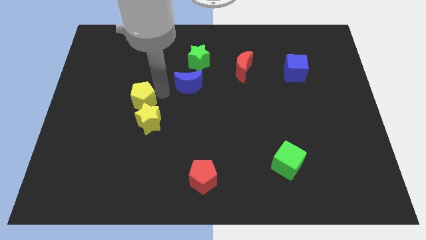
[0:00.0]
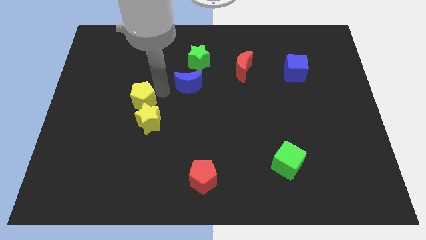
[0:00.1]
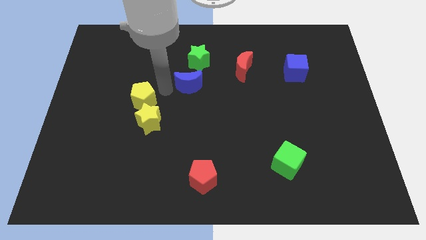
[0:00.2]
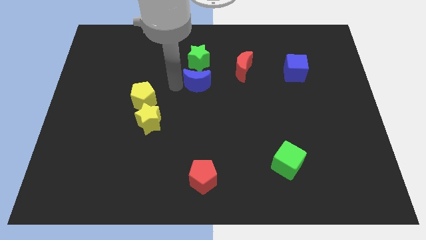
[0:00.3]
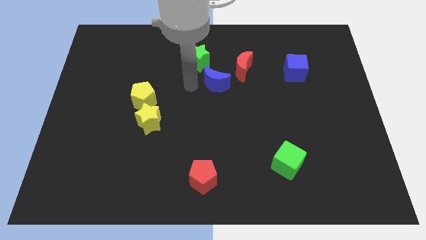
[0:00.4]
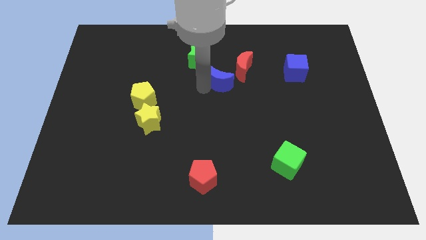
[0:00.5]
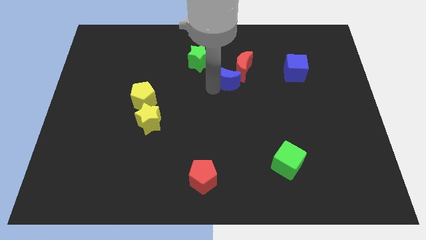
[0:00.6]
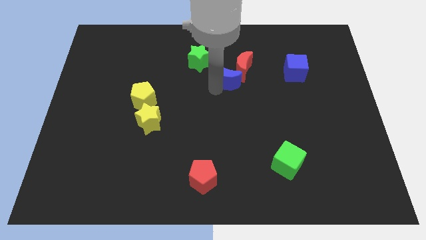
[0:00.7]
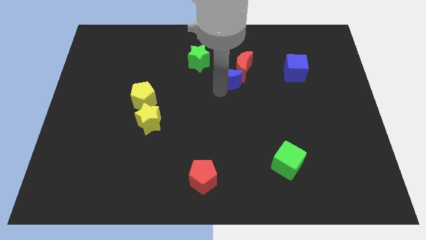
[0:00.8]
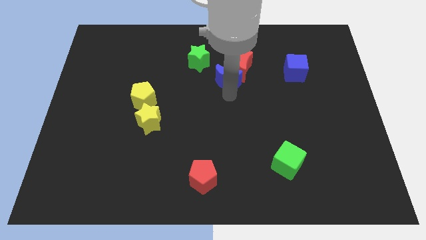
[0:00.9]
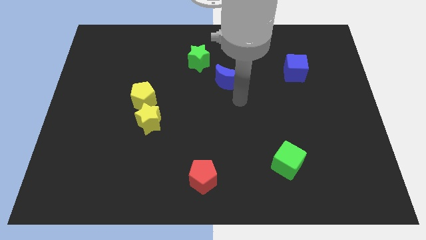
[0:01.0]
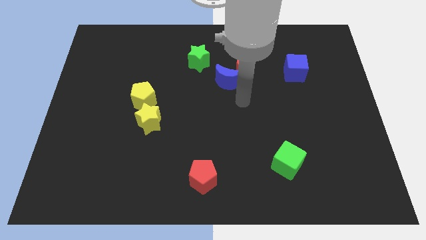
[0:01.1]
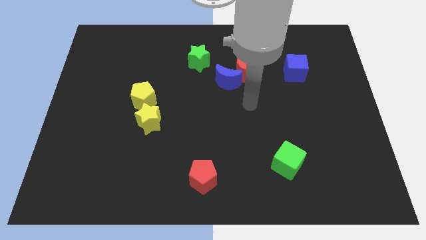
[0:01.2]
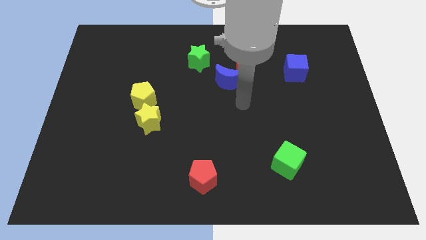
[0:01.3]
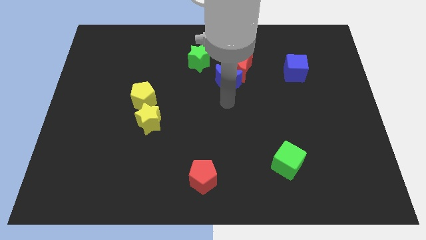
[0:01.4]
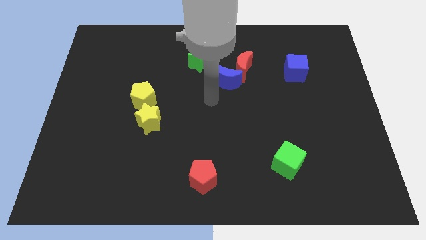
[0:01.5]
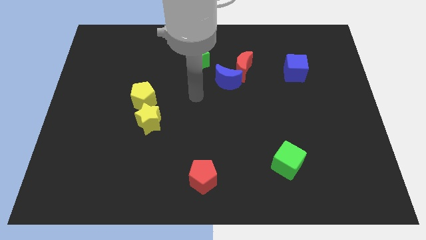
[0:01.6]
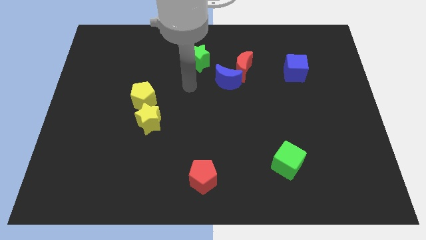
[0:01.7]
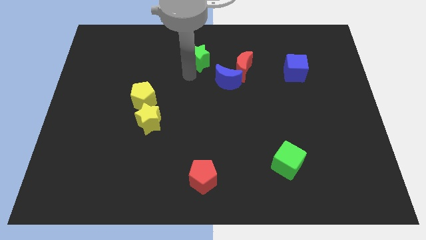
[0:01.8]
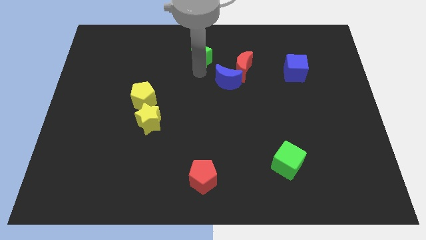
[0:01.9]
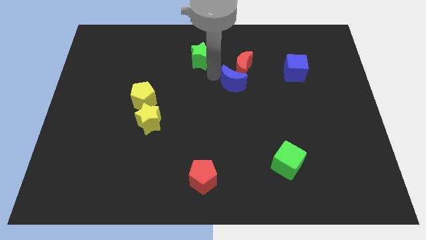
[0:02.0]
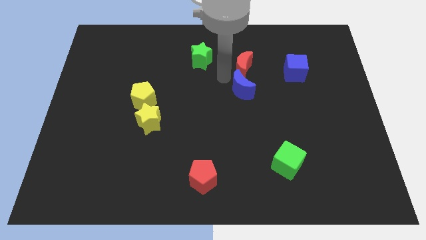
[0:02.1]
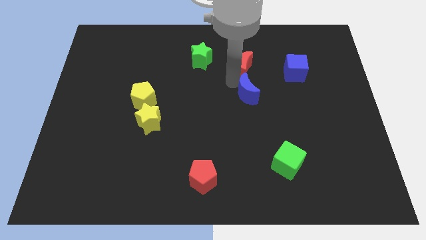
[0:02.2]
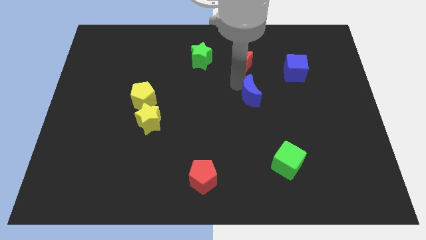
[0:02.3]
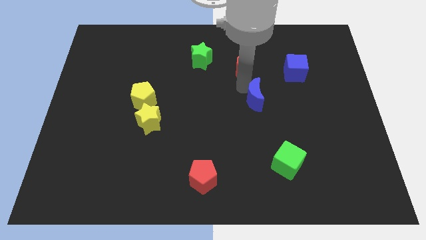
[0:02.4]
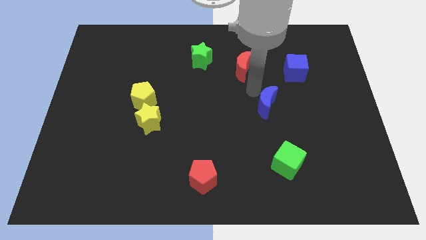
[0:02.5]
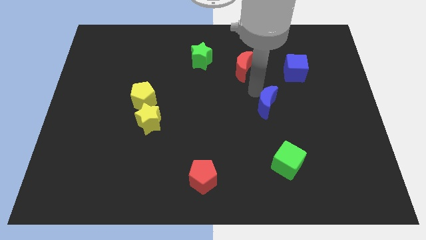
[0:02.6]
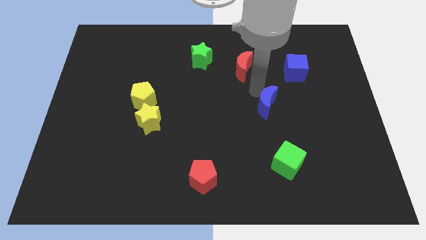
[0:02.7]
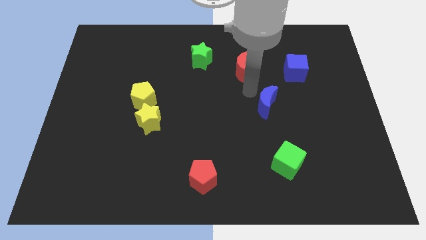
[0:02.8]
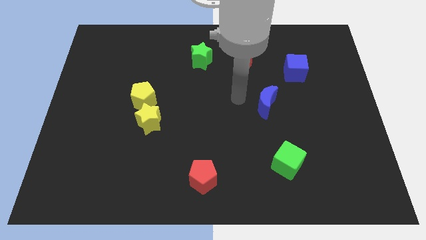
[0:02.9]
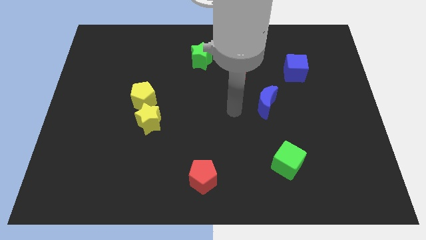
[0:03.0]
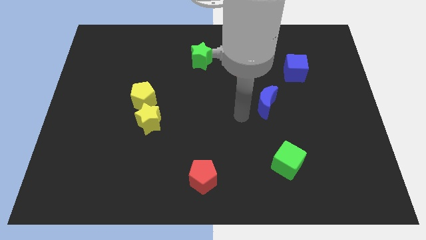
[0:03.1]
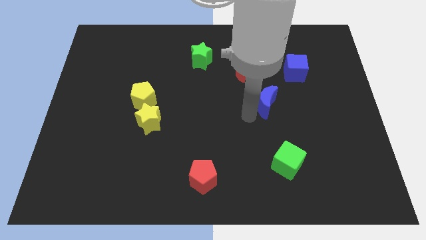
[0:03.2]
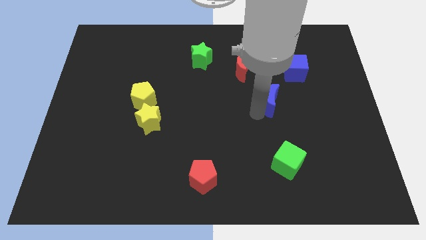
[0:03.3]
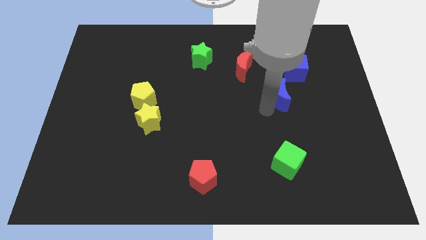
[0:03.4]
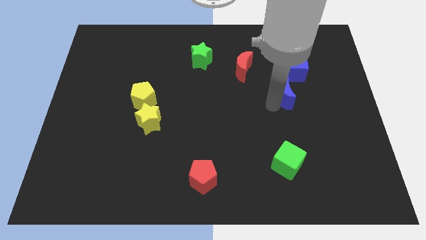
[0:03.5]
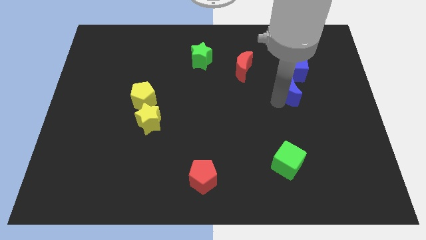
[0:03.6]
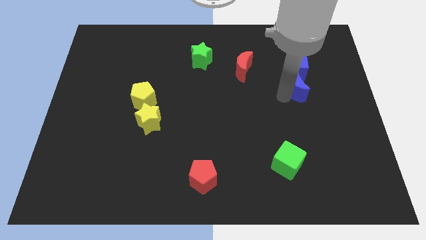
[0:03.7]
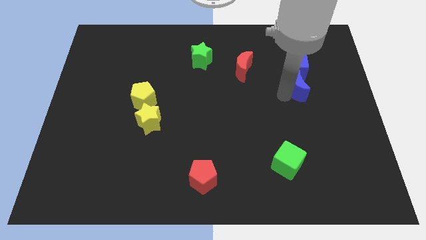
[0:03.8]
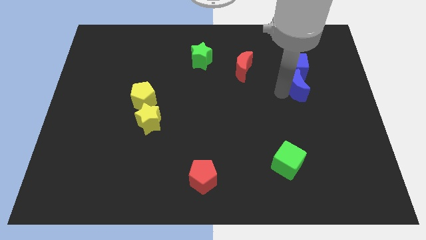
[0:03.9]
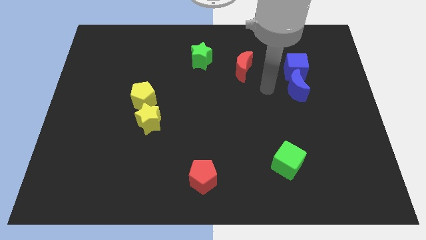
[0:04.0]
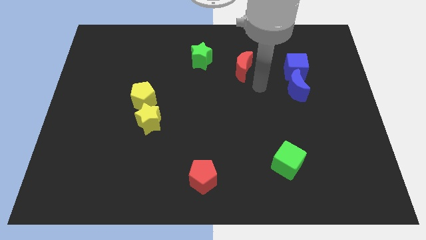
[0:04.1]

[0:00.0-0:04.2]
push the blue moon to the bottom left side of the blue cube

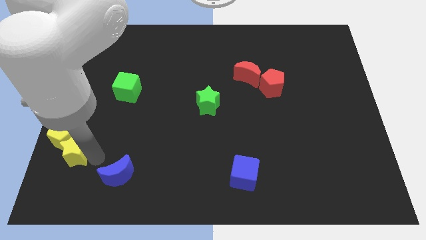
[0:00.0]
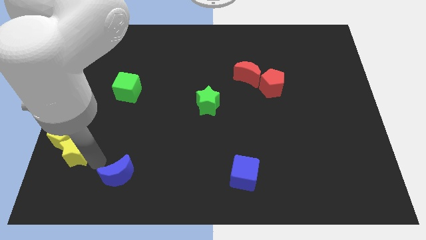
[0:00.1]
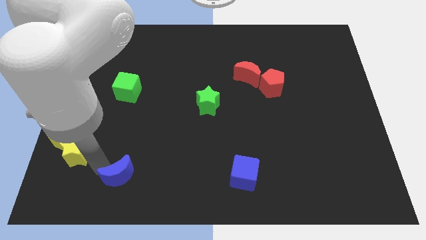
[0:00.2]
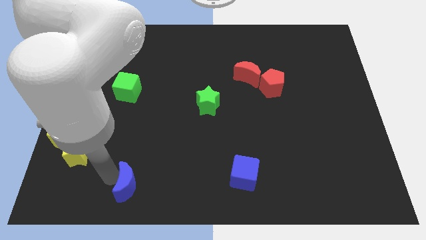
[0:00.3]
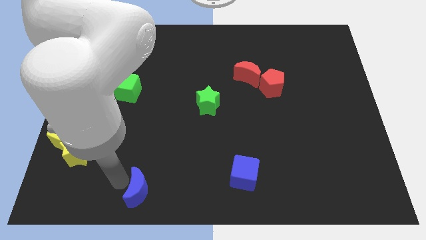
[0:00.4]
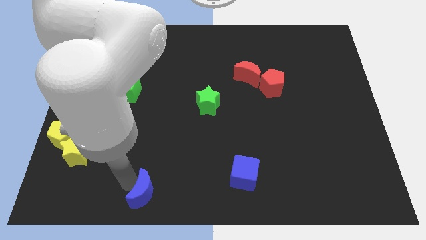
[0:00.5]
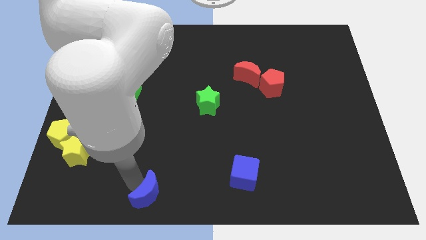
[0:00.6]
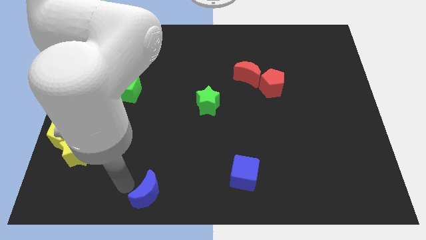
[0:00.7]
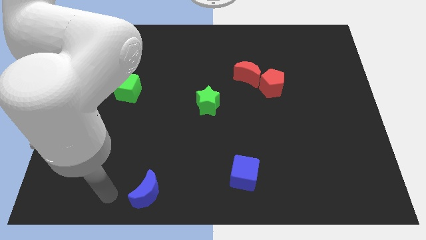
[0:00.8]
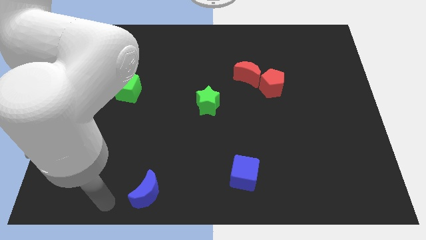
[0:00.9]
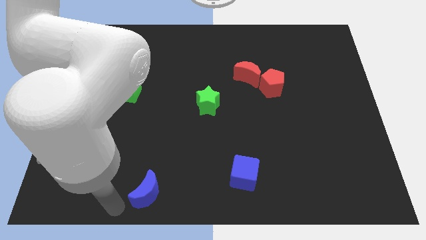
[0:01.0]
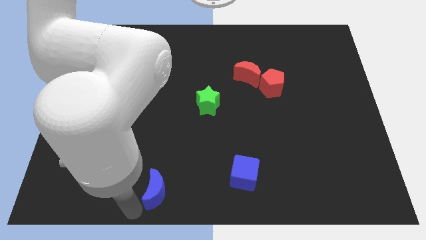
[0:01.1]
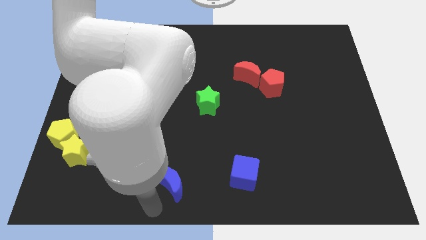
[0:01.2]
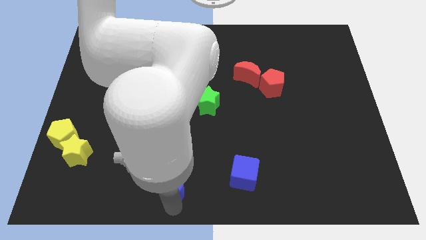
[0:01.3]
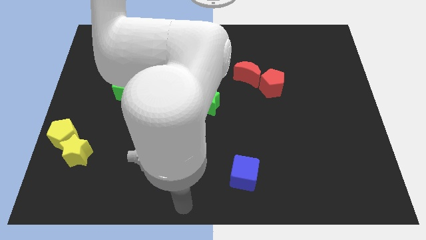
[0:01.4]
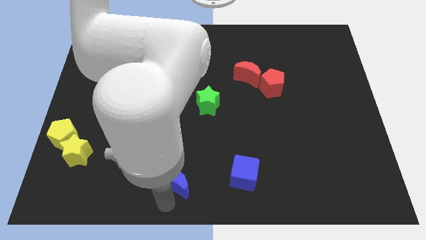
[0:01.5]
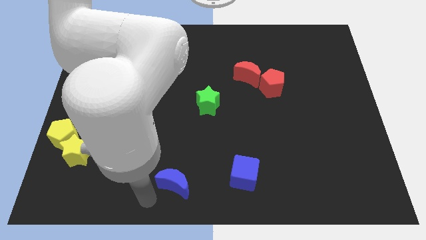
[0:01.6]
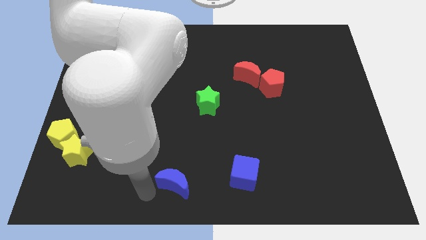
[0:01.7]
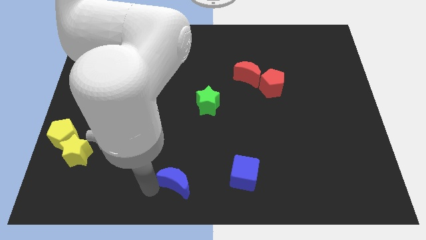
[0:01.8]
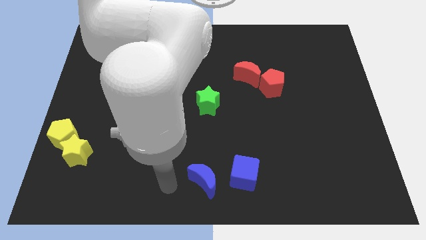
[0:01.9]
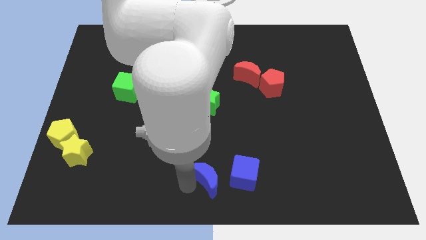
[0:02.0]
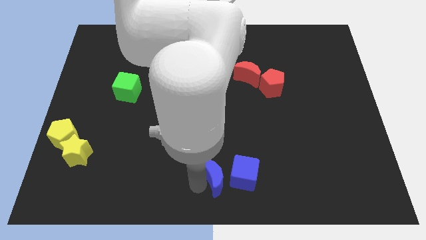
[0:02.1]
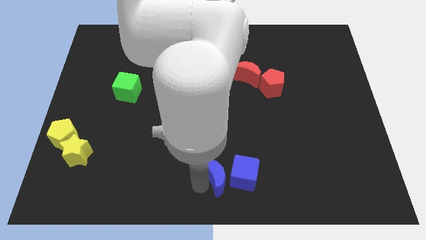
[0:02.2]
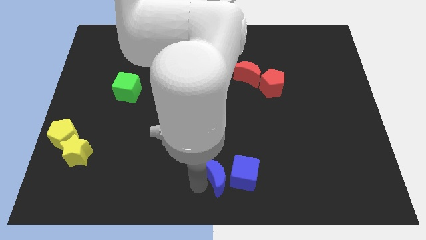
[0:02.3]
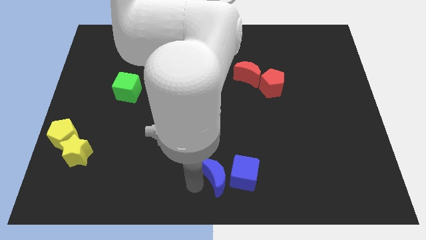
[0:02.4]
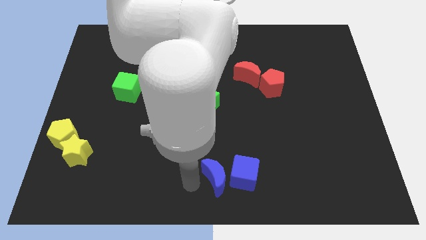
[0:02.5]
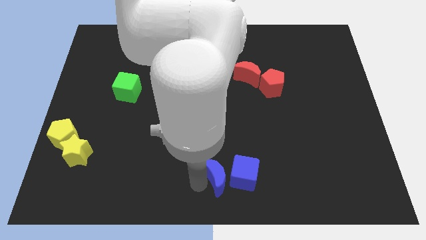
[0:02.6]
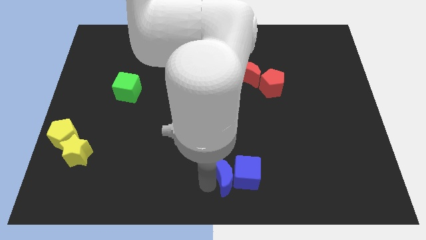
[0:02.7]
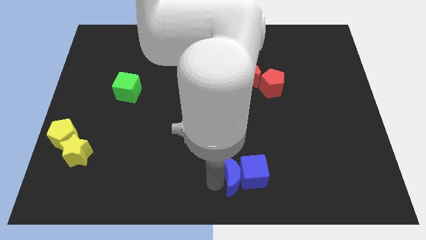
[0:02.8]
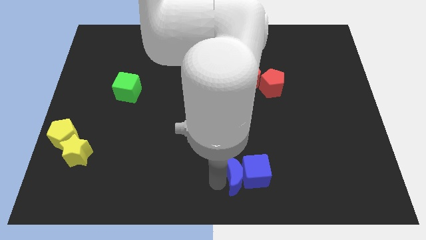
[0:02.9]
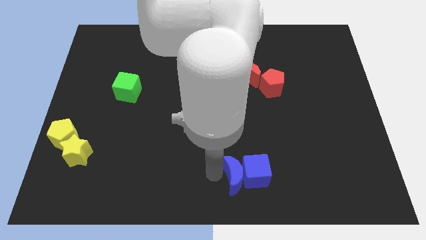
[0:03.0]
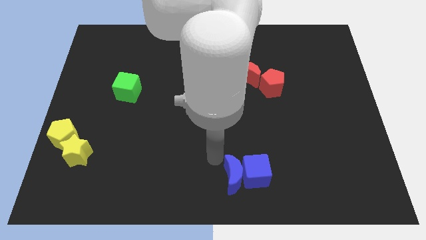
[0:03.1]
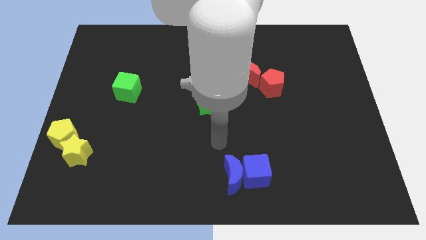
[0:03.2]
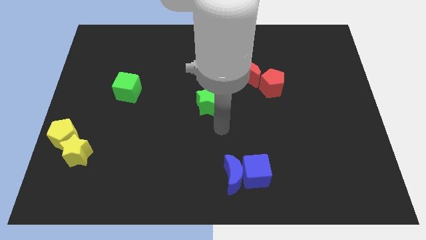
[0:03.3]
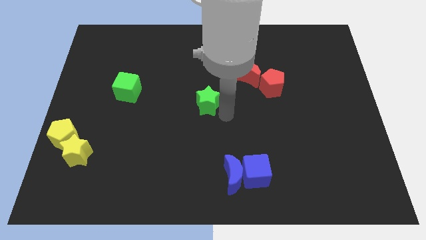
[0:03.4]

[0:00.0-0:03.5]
place the blue moon left to the blue cube

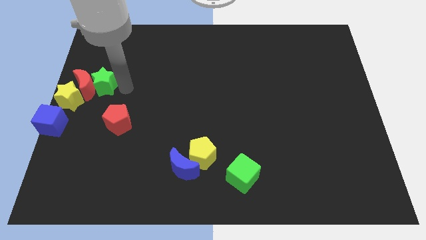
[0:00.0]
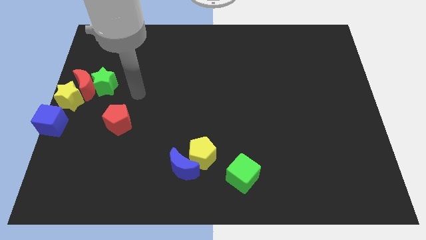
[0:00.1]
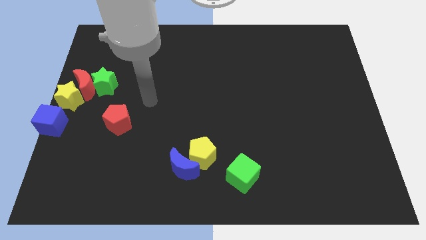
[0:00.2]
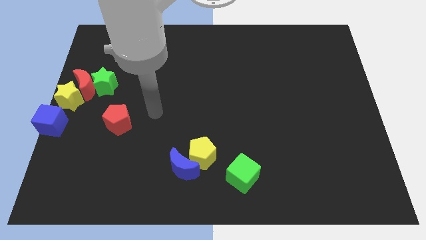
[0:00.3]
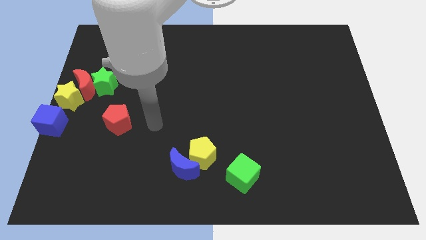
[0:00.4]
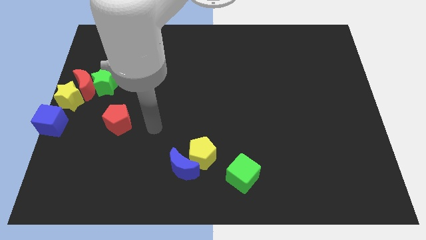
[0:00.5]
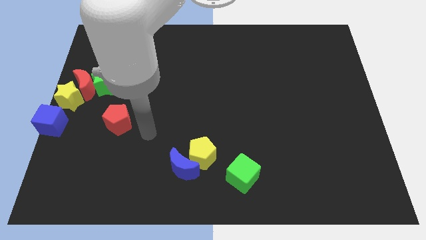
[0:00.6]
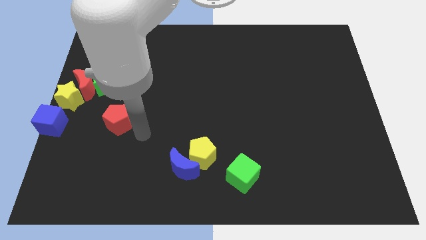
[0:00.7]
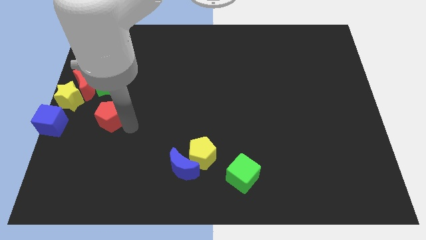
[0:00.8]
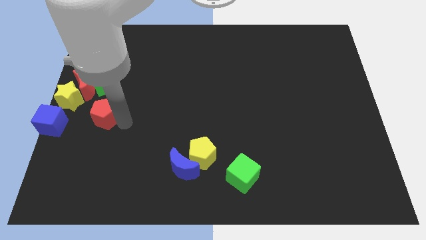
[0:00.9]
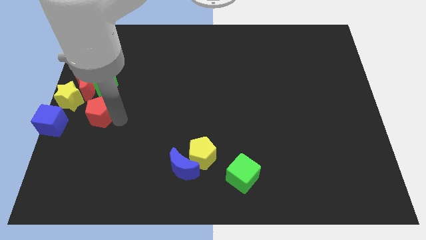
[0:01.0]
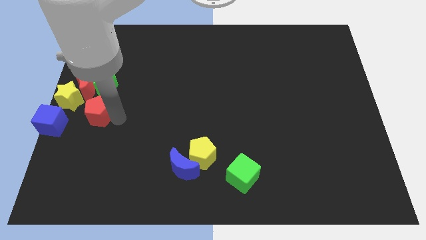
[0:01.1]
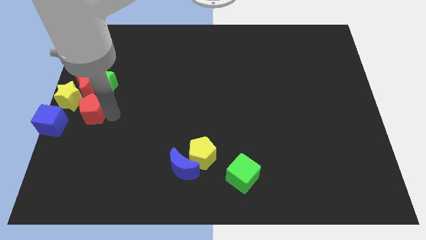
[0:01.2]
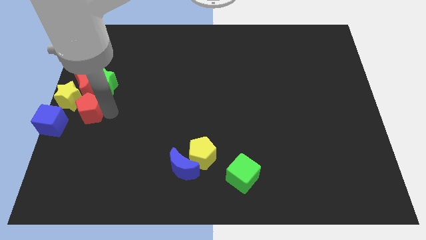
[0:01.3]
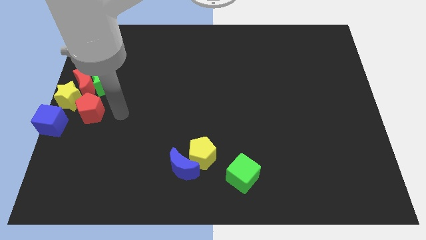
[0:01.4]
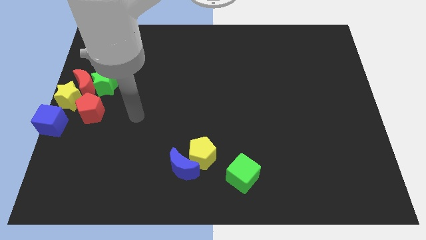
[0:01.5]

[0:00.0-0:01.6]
move the red pentagon towards the right side of the yellow star
